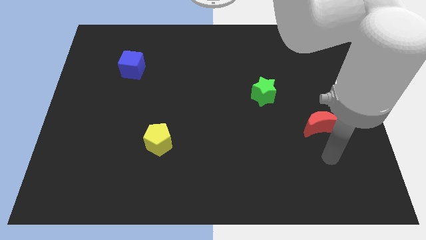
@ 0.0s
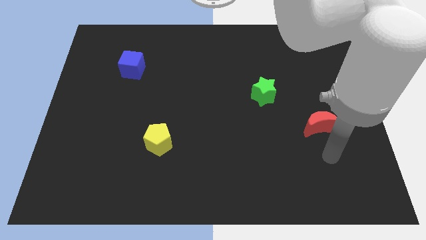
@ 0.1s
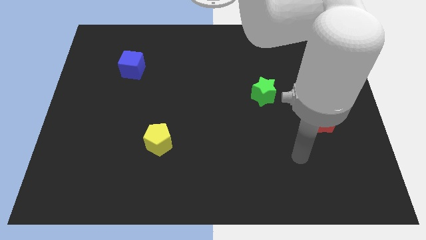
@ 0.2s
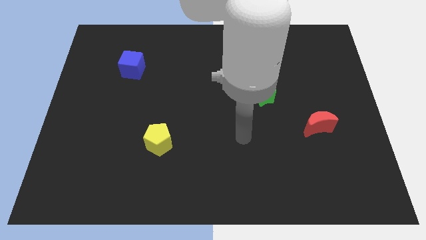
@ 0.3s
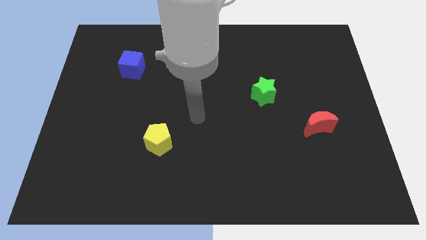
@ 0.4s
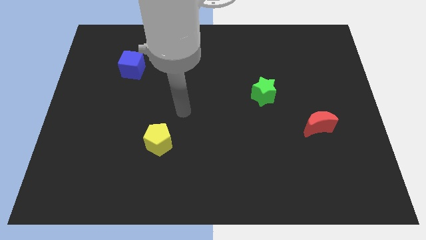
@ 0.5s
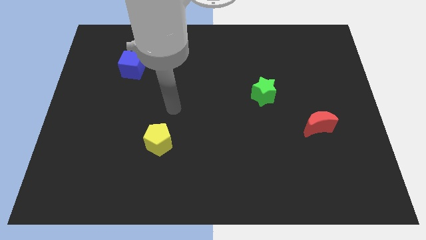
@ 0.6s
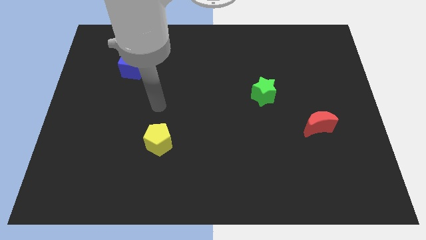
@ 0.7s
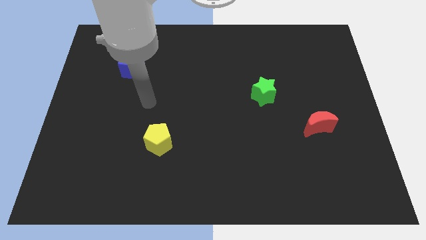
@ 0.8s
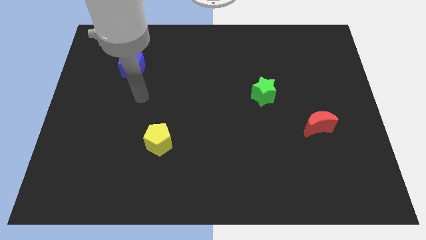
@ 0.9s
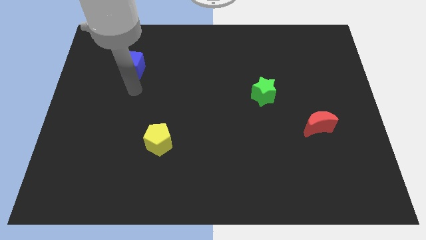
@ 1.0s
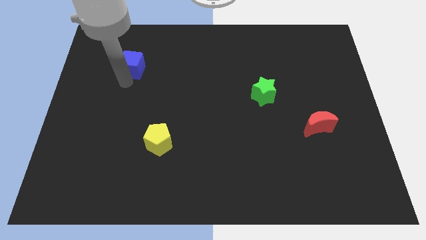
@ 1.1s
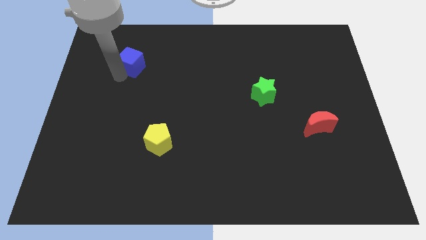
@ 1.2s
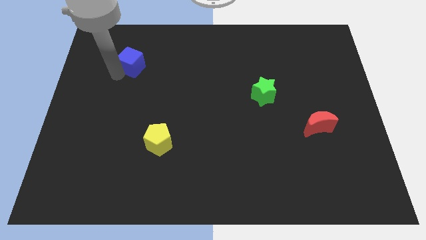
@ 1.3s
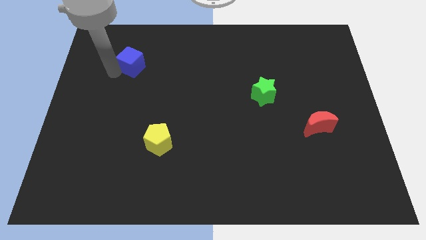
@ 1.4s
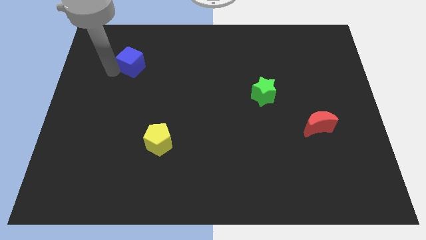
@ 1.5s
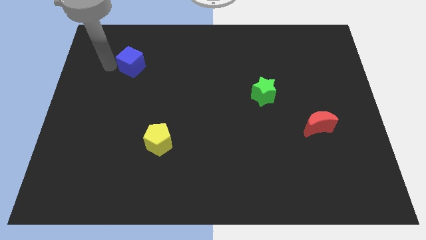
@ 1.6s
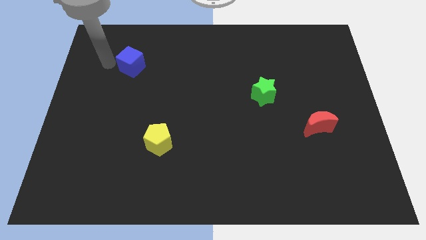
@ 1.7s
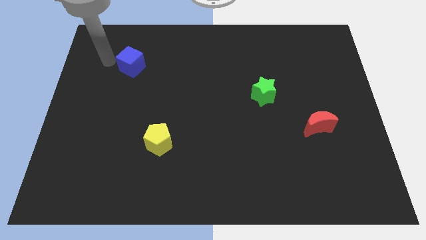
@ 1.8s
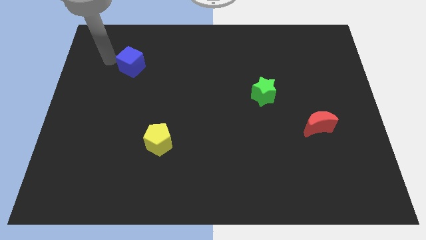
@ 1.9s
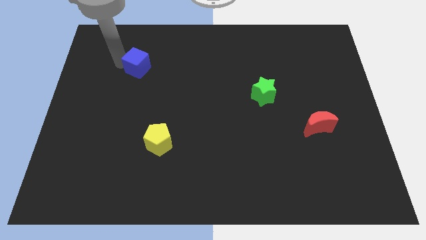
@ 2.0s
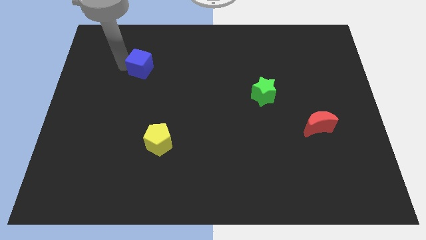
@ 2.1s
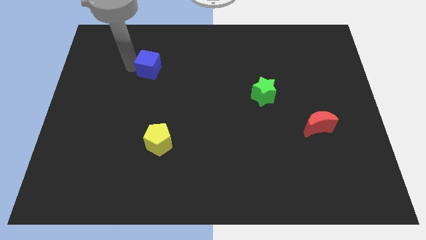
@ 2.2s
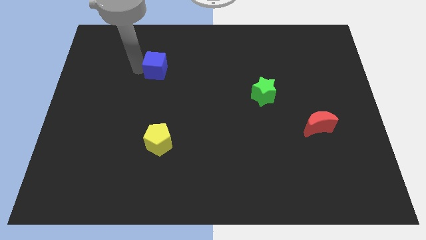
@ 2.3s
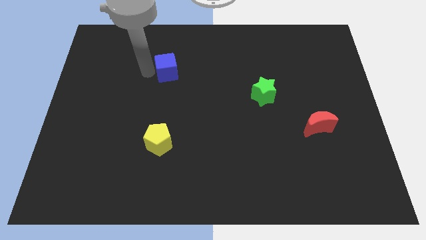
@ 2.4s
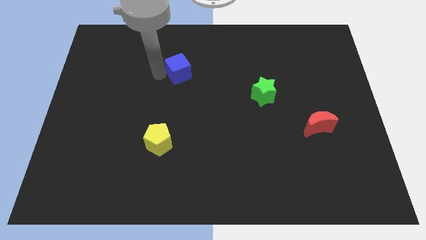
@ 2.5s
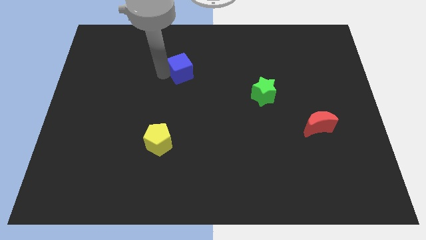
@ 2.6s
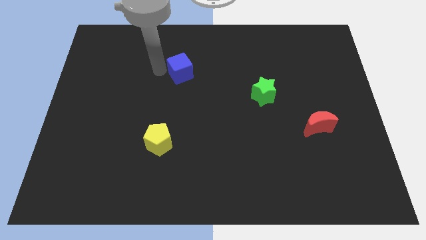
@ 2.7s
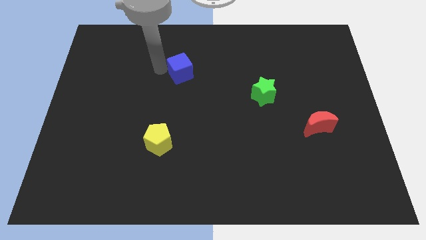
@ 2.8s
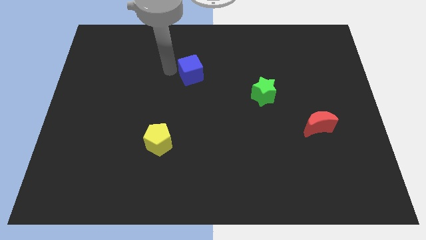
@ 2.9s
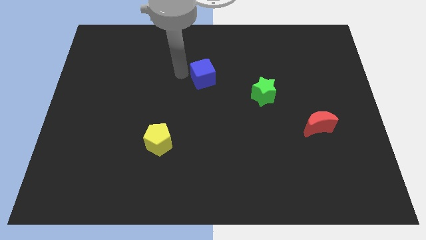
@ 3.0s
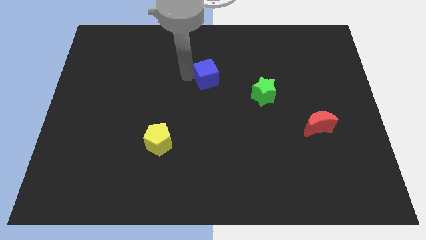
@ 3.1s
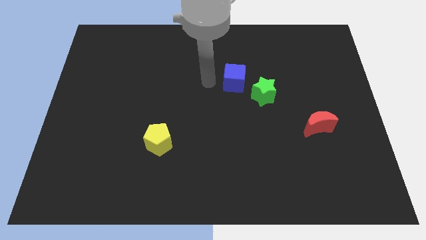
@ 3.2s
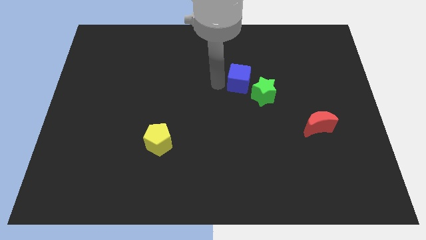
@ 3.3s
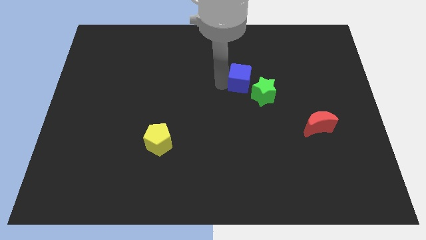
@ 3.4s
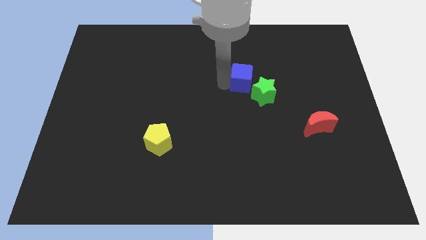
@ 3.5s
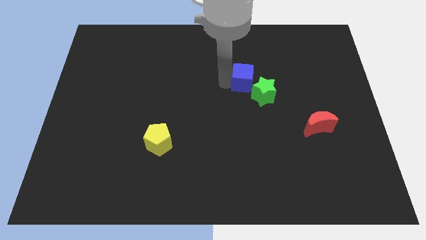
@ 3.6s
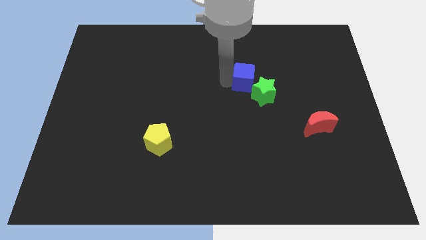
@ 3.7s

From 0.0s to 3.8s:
push the cube to the green star

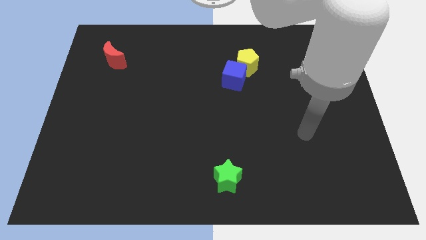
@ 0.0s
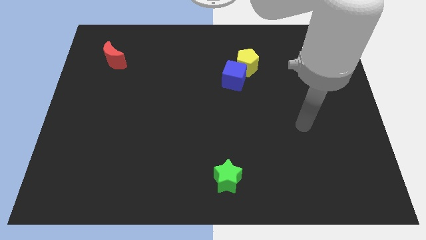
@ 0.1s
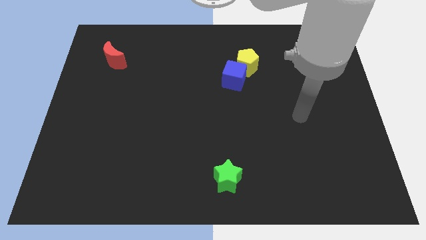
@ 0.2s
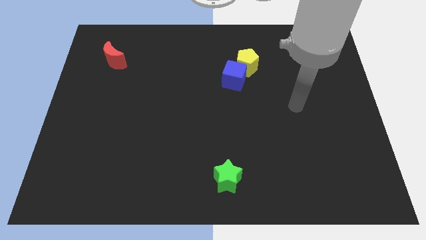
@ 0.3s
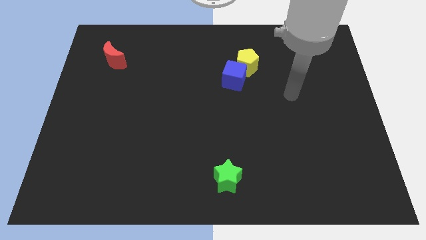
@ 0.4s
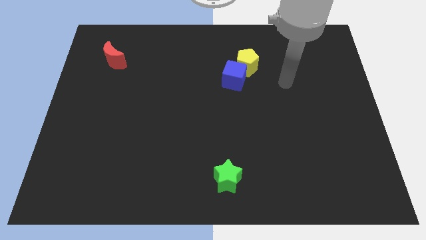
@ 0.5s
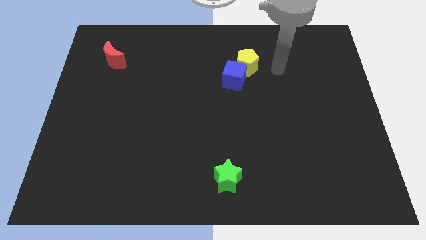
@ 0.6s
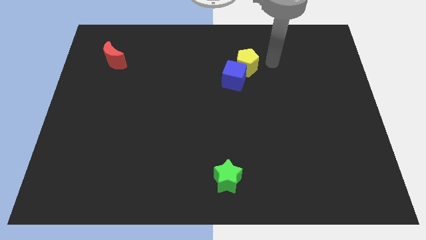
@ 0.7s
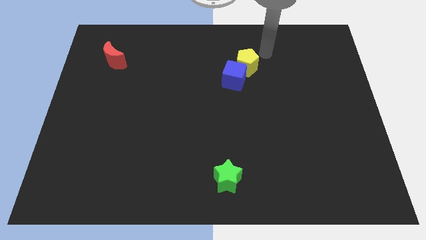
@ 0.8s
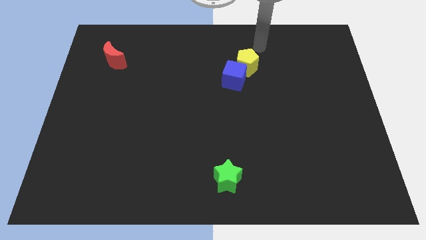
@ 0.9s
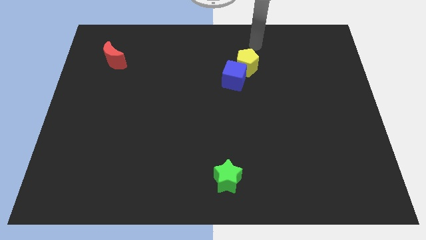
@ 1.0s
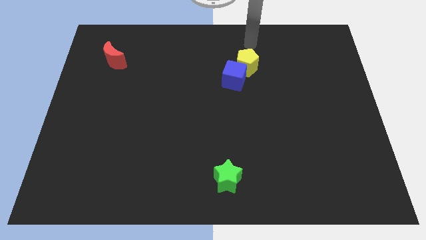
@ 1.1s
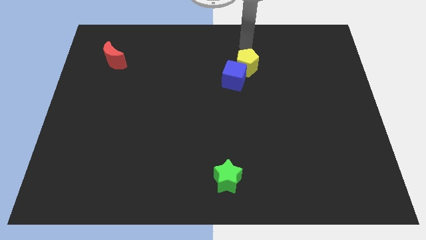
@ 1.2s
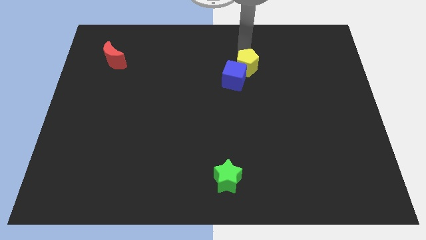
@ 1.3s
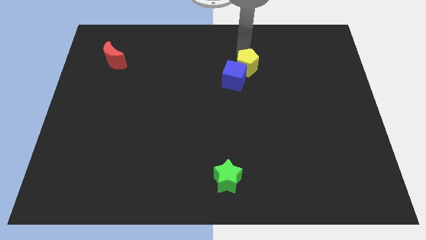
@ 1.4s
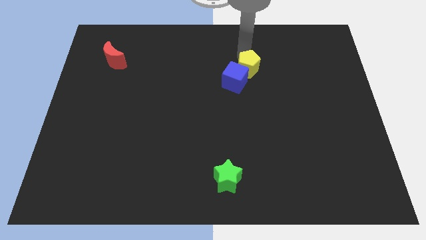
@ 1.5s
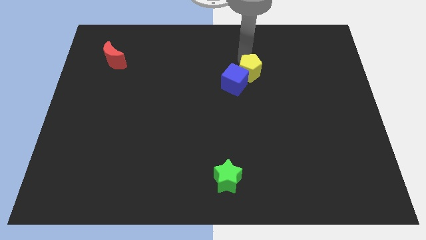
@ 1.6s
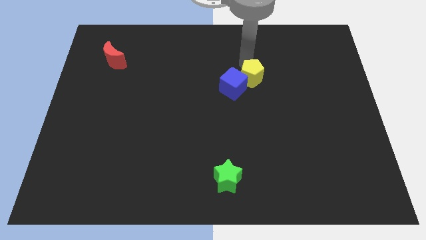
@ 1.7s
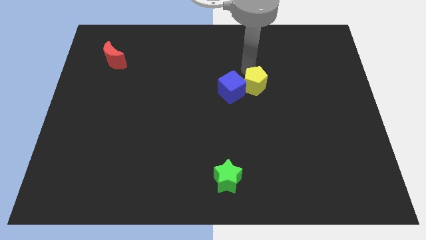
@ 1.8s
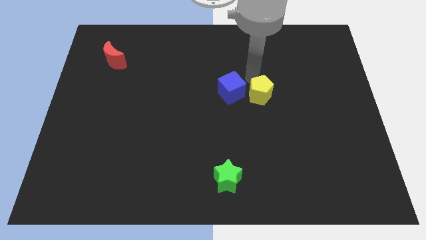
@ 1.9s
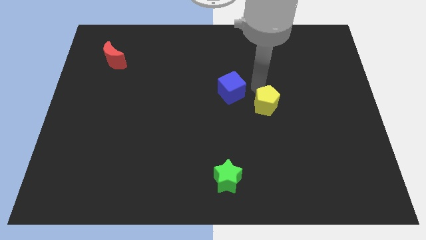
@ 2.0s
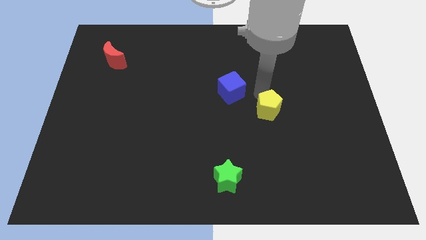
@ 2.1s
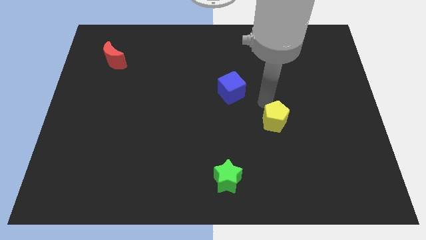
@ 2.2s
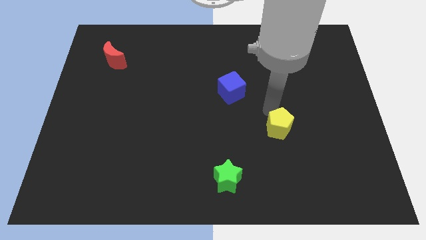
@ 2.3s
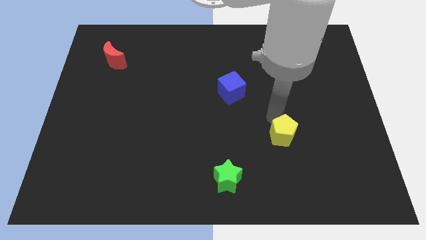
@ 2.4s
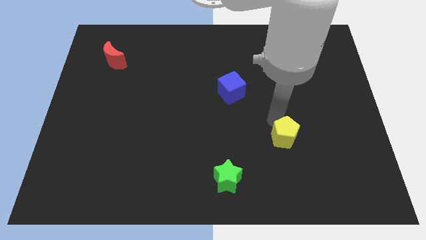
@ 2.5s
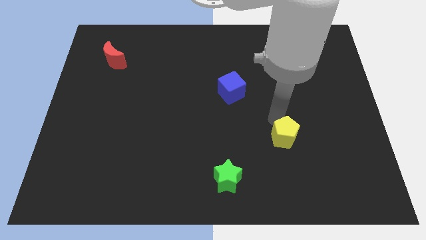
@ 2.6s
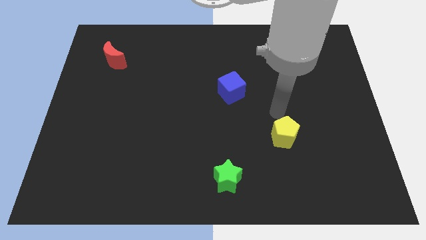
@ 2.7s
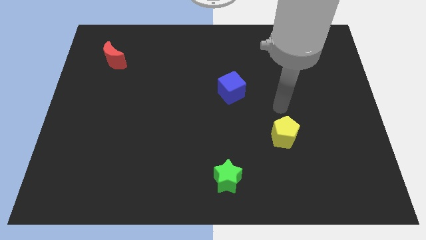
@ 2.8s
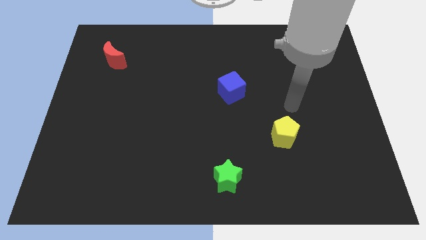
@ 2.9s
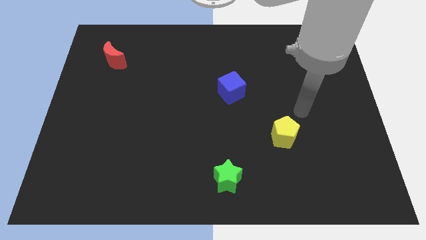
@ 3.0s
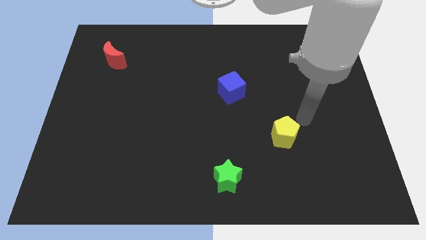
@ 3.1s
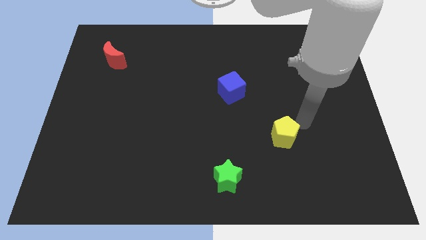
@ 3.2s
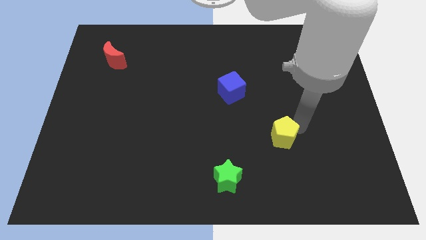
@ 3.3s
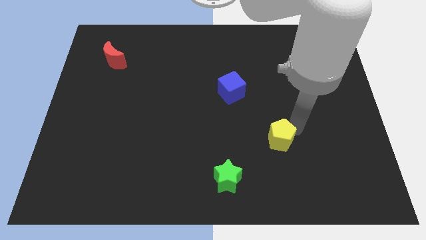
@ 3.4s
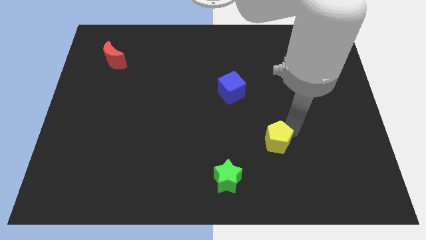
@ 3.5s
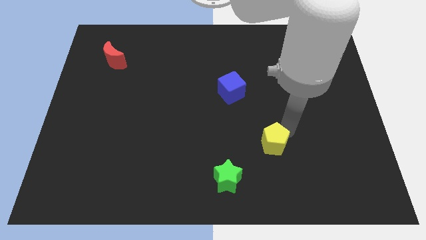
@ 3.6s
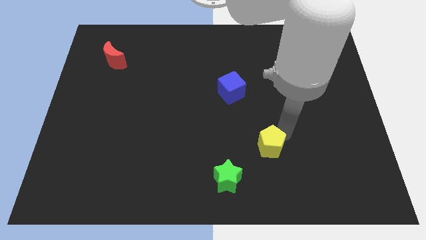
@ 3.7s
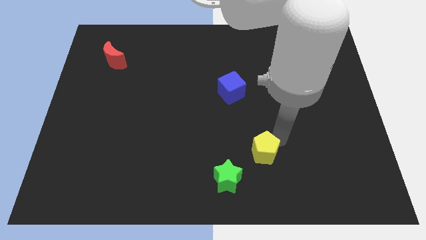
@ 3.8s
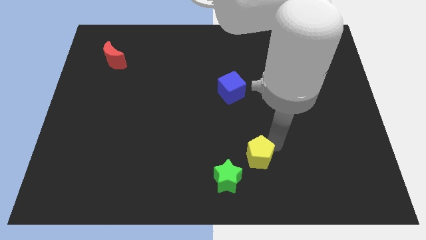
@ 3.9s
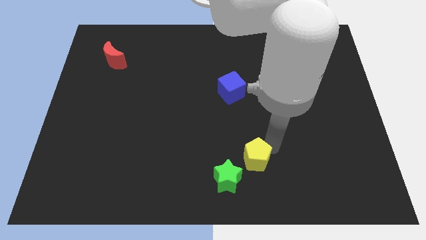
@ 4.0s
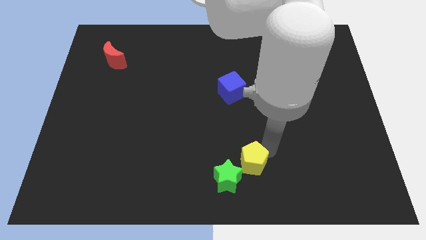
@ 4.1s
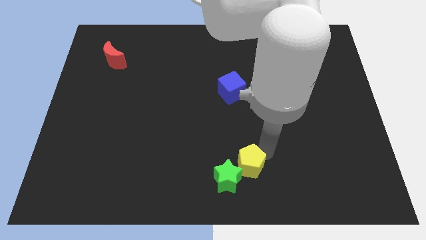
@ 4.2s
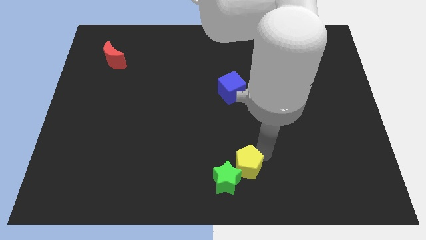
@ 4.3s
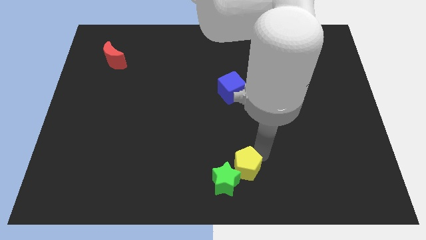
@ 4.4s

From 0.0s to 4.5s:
move the pentagon towards the star

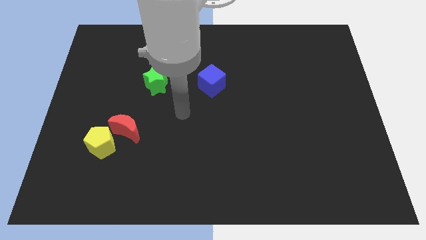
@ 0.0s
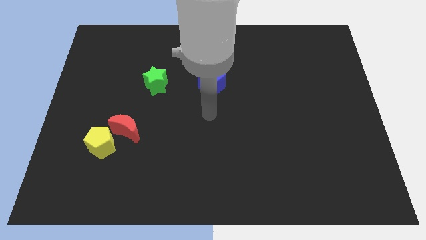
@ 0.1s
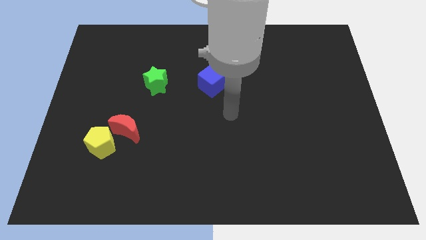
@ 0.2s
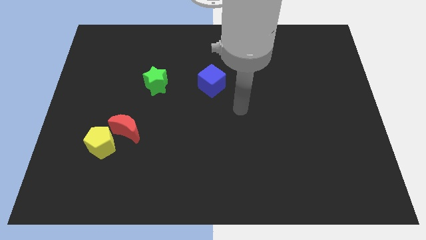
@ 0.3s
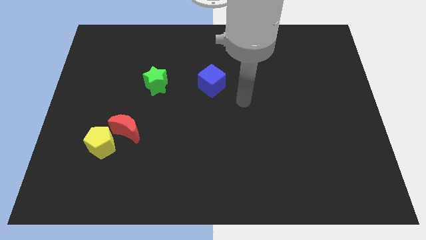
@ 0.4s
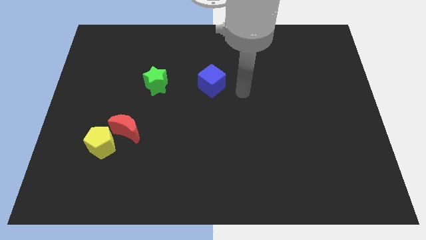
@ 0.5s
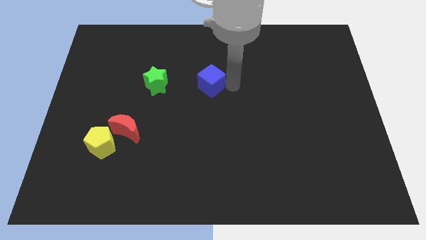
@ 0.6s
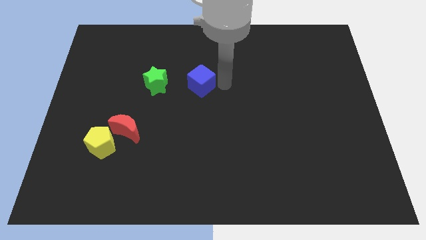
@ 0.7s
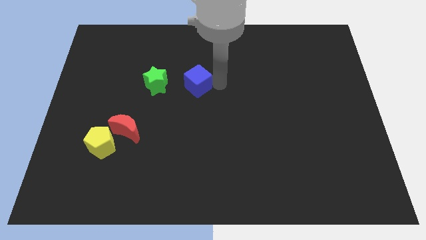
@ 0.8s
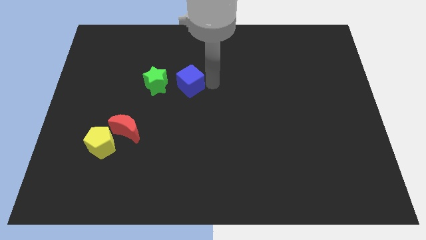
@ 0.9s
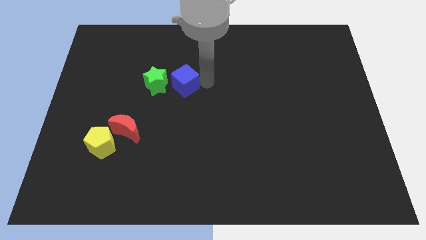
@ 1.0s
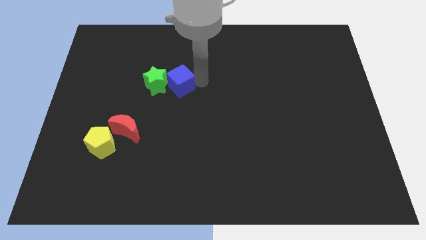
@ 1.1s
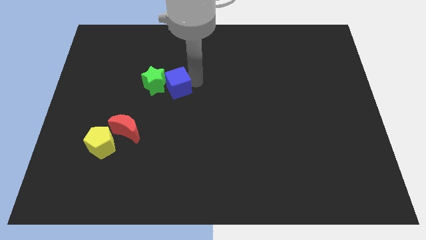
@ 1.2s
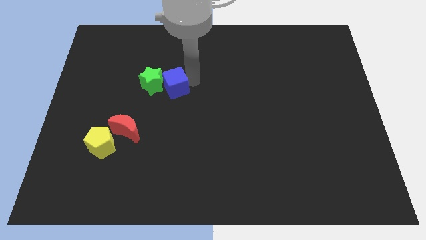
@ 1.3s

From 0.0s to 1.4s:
push the cube next to the green star
